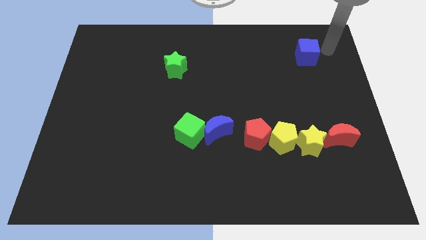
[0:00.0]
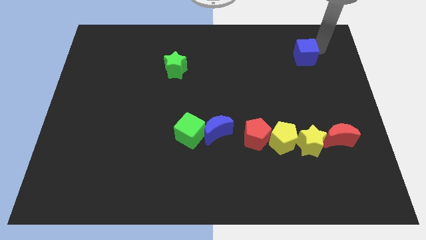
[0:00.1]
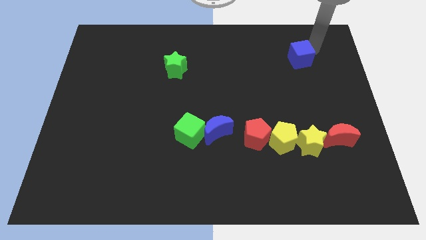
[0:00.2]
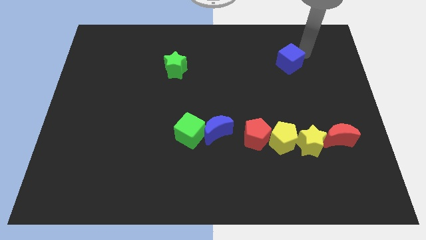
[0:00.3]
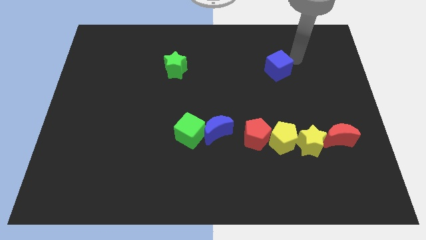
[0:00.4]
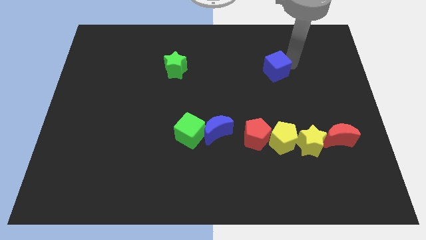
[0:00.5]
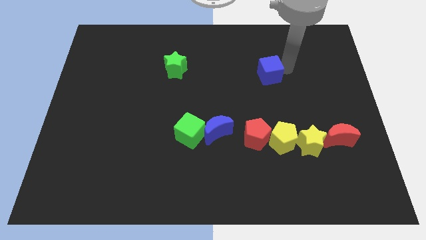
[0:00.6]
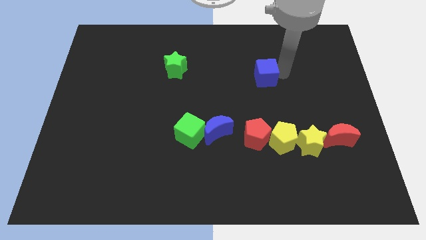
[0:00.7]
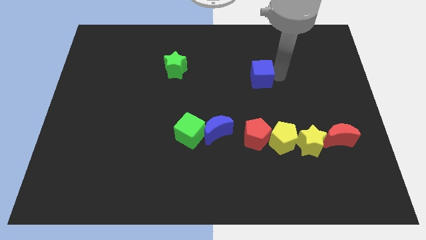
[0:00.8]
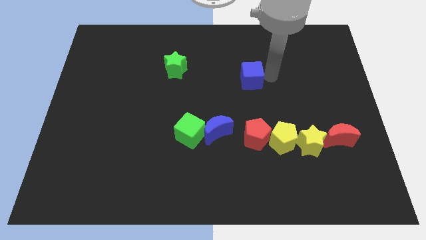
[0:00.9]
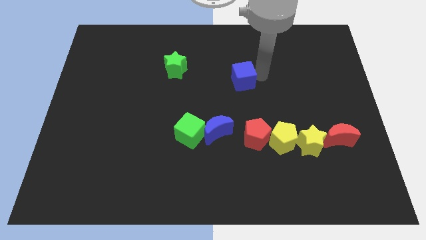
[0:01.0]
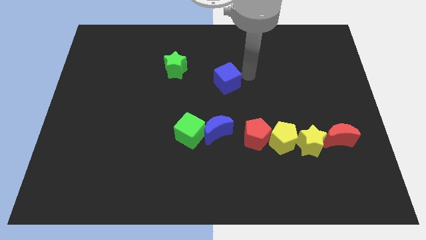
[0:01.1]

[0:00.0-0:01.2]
push the blue cube to the left of the board

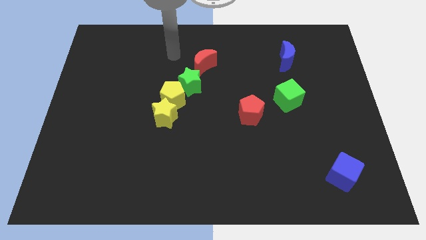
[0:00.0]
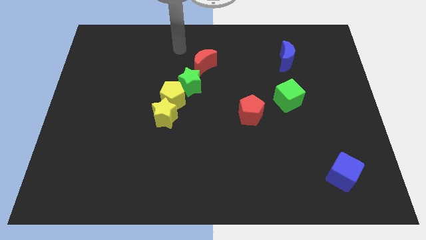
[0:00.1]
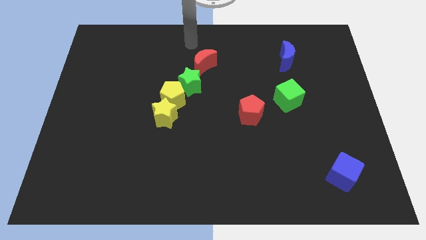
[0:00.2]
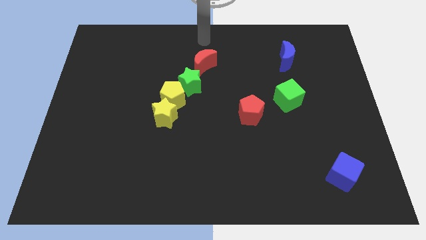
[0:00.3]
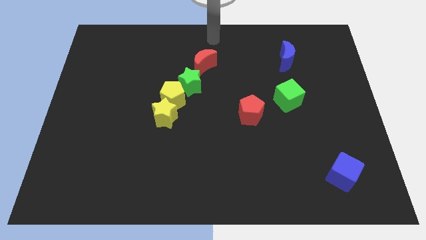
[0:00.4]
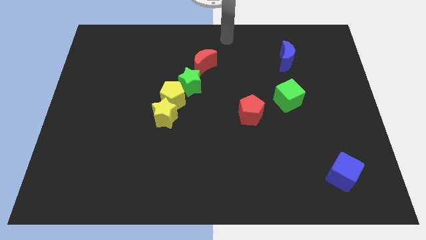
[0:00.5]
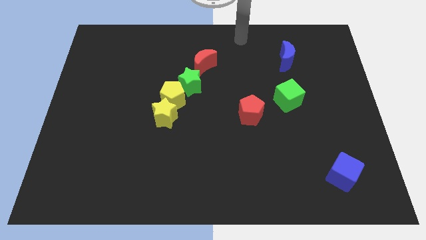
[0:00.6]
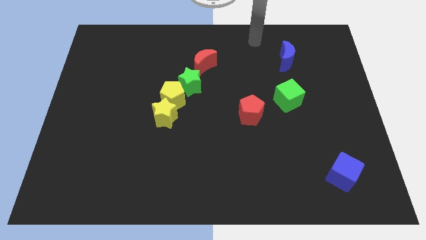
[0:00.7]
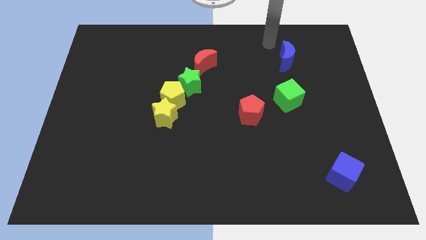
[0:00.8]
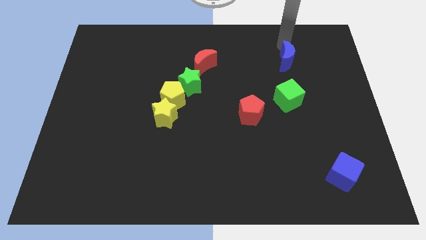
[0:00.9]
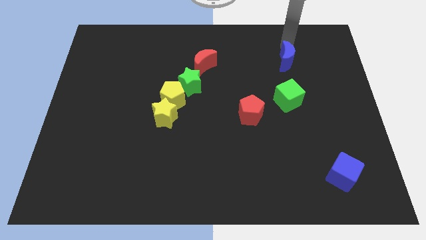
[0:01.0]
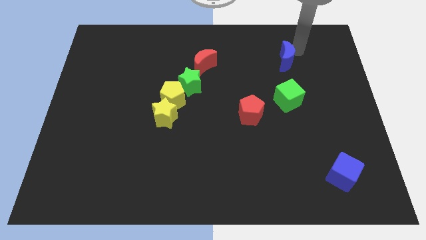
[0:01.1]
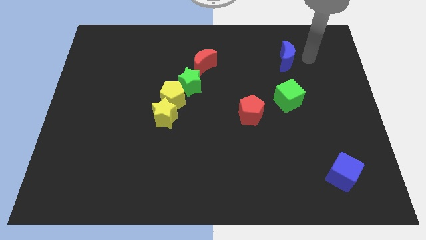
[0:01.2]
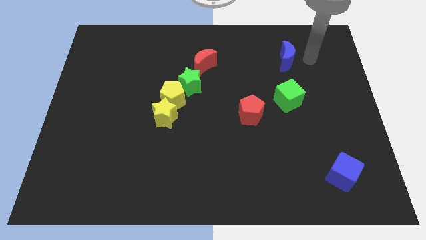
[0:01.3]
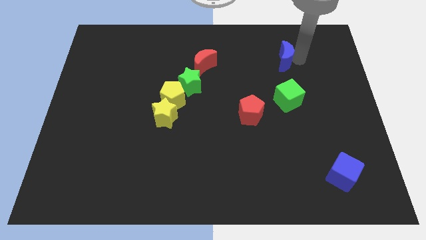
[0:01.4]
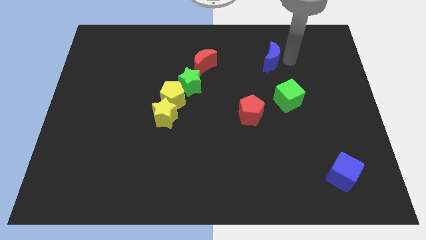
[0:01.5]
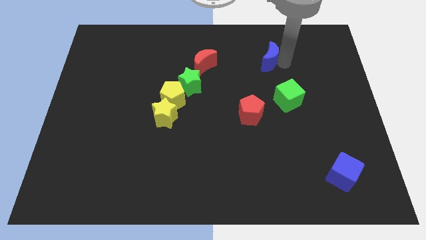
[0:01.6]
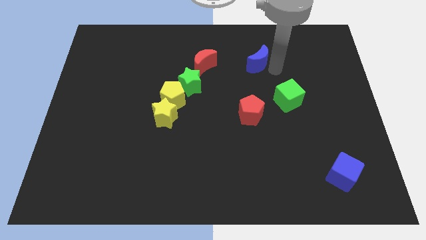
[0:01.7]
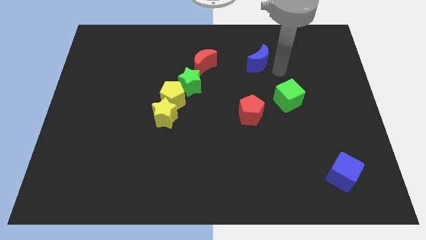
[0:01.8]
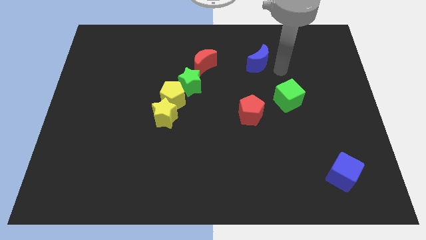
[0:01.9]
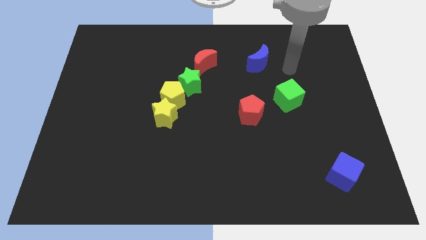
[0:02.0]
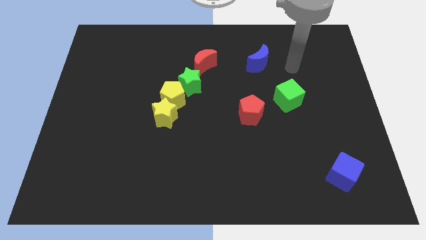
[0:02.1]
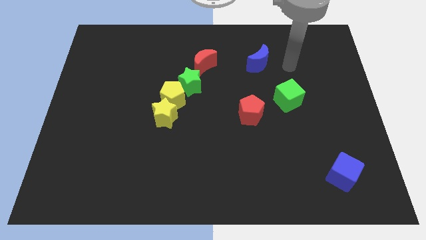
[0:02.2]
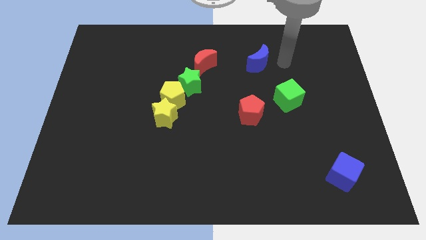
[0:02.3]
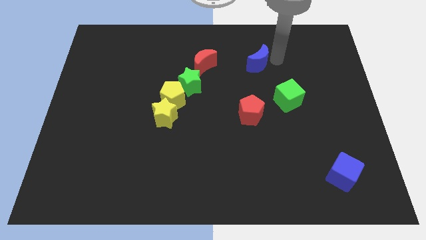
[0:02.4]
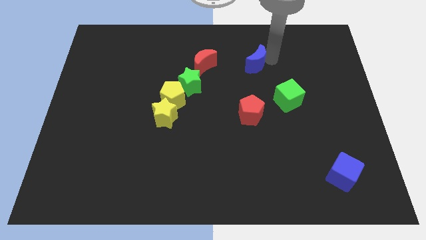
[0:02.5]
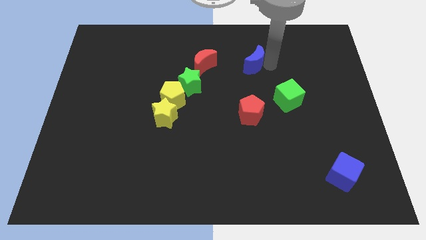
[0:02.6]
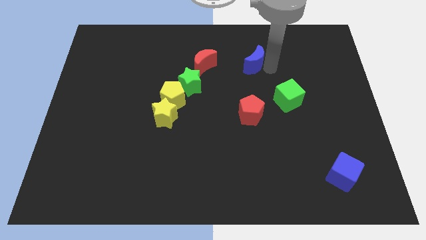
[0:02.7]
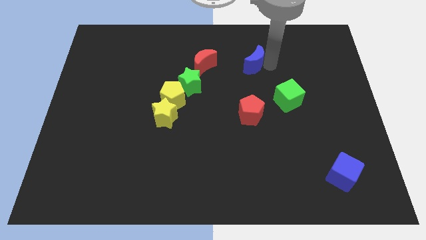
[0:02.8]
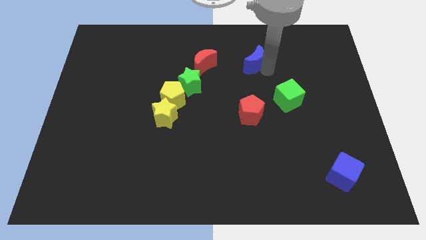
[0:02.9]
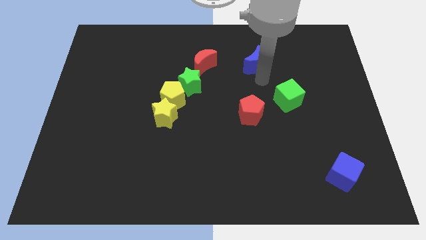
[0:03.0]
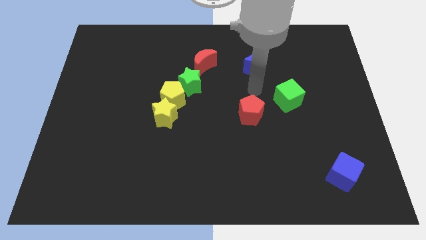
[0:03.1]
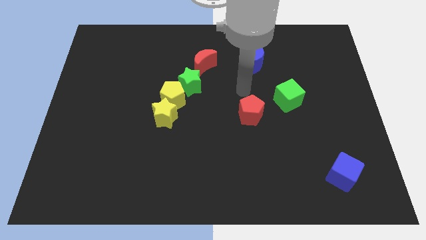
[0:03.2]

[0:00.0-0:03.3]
push the blue crescent to the top of the red pentagon

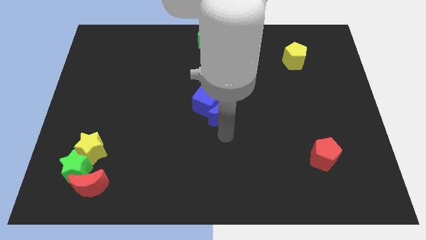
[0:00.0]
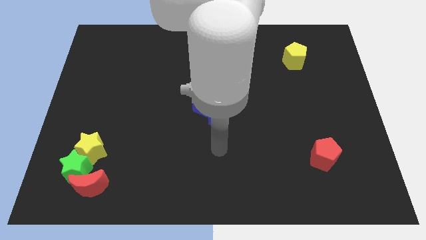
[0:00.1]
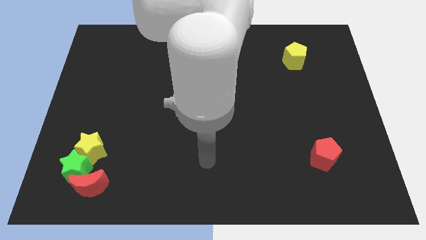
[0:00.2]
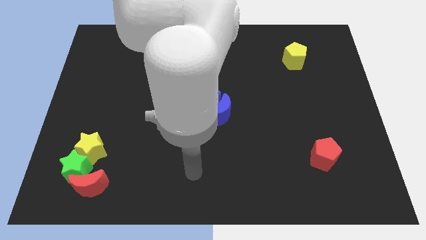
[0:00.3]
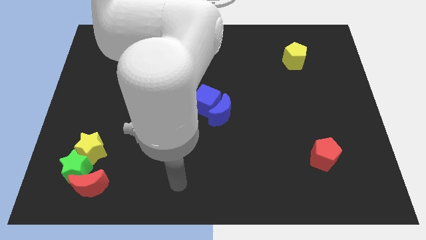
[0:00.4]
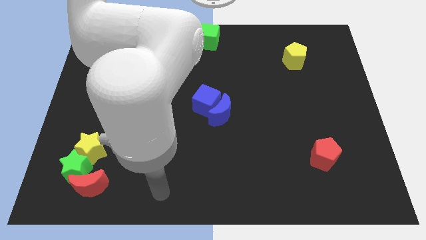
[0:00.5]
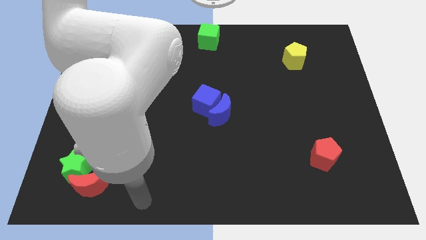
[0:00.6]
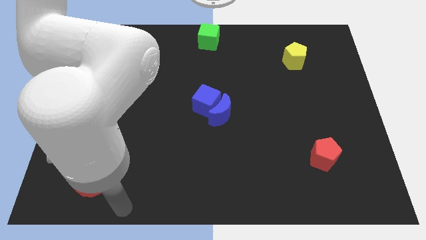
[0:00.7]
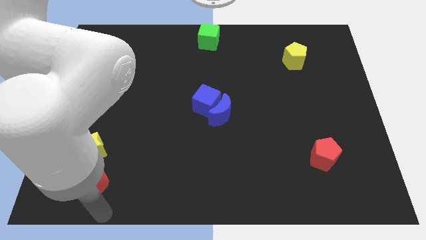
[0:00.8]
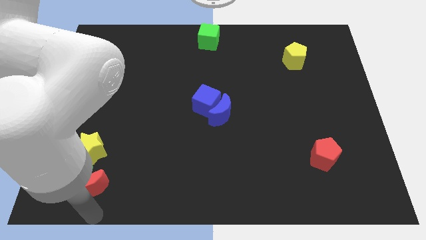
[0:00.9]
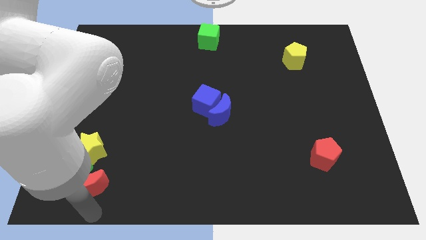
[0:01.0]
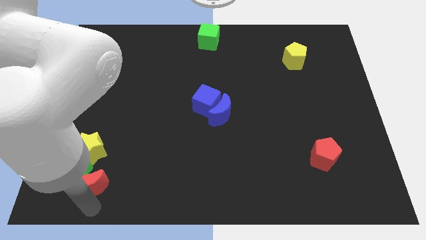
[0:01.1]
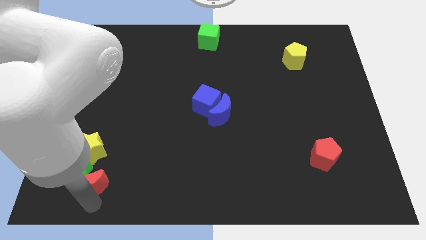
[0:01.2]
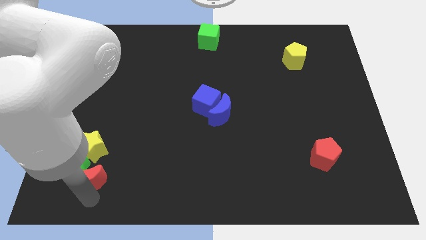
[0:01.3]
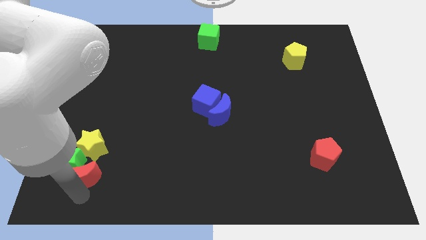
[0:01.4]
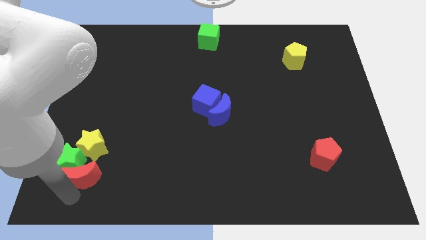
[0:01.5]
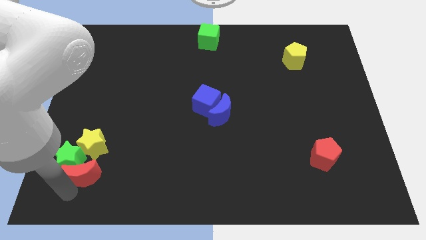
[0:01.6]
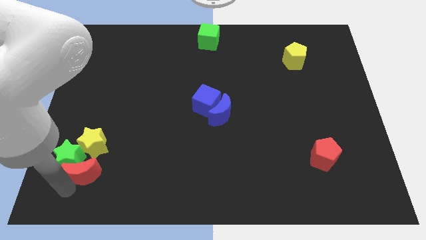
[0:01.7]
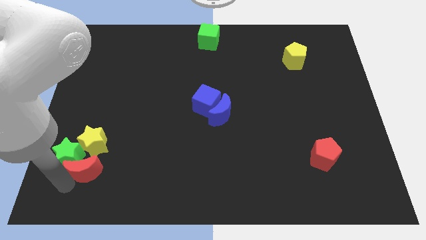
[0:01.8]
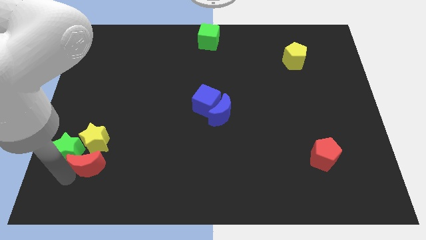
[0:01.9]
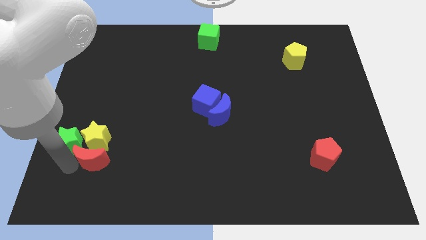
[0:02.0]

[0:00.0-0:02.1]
slide the red crescent yellow star and green star towards top side

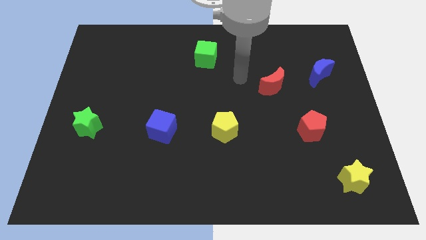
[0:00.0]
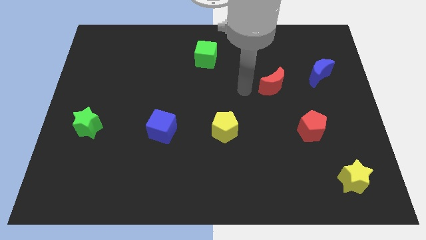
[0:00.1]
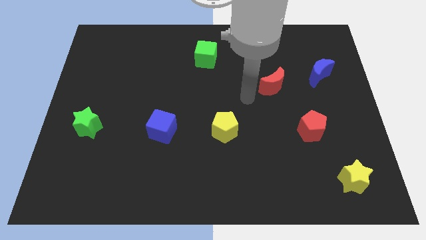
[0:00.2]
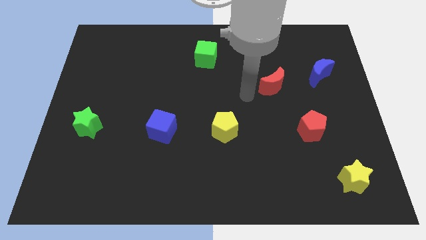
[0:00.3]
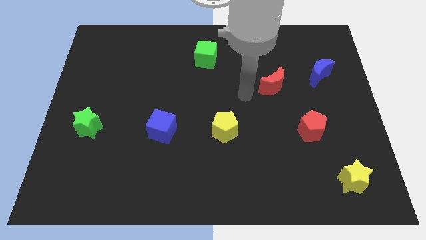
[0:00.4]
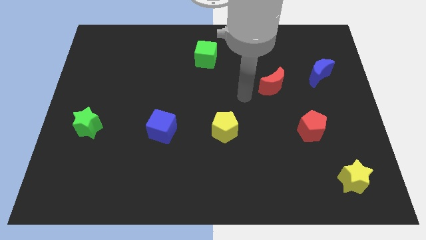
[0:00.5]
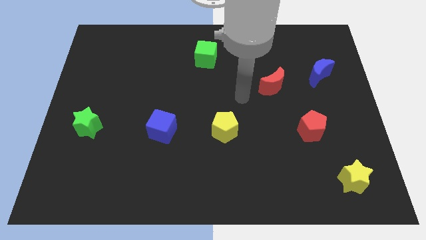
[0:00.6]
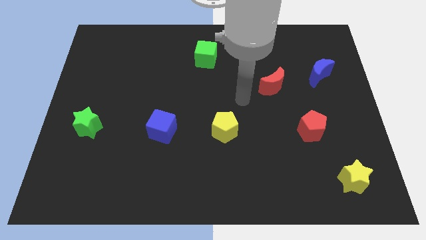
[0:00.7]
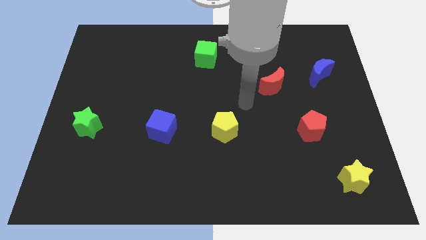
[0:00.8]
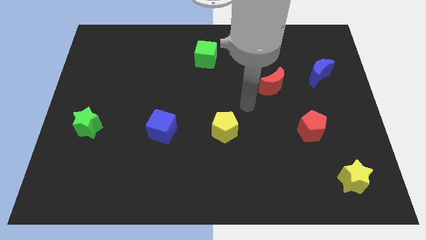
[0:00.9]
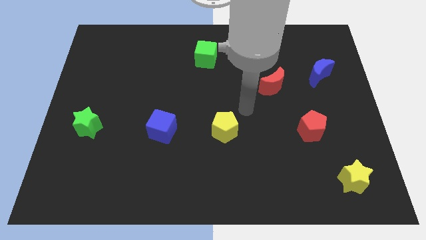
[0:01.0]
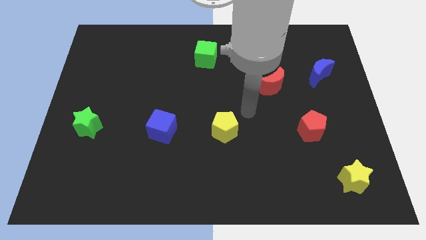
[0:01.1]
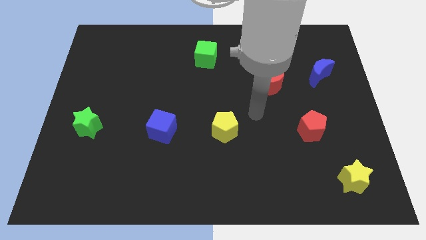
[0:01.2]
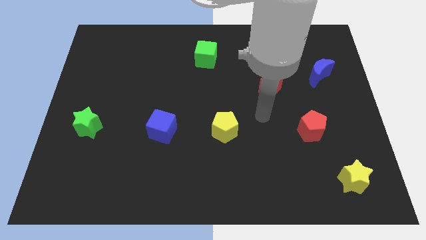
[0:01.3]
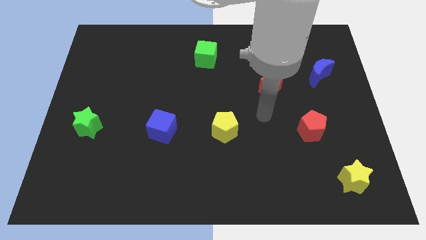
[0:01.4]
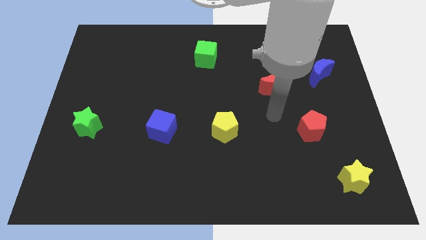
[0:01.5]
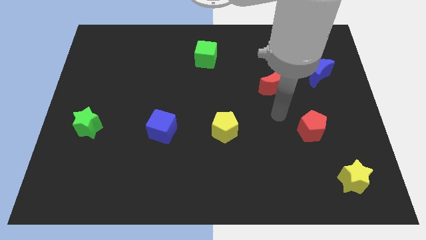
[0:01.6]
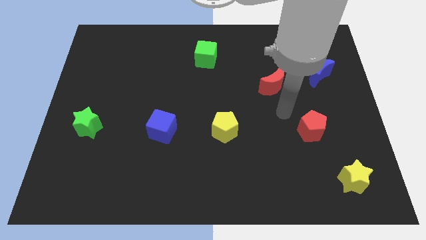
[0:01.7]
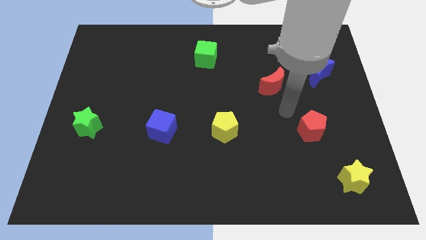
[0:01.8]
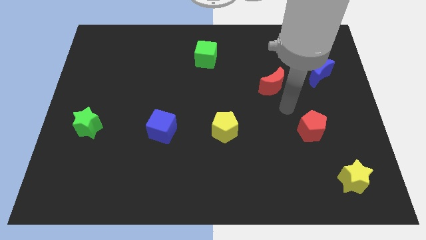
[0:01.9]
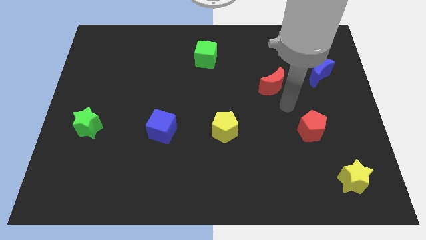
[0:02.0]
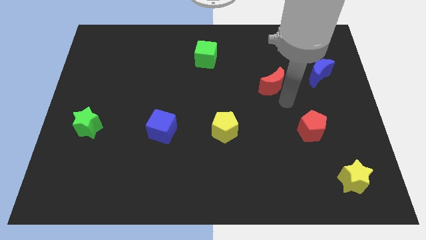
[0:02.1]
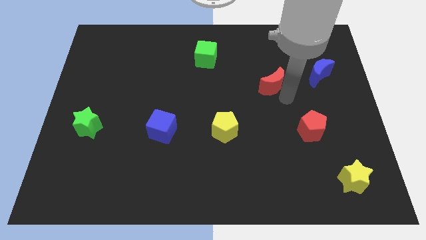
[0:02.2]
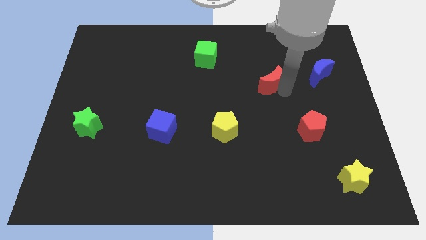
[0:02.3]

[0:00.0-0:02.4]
place the arm down to the red moon

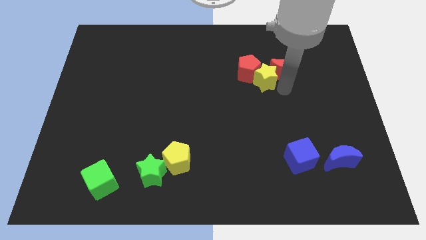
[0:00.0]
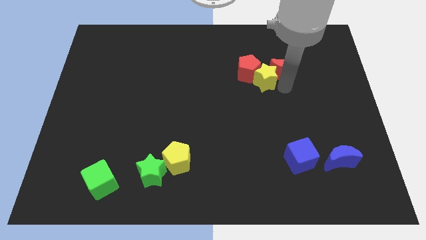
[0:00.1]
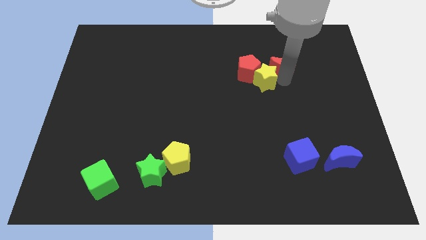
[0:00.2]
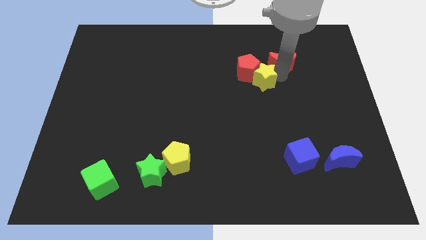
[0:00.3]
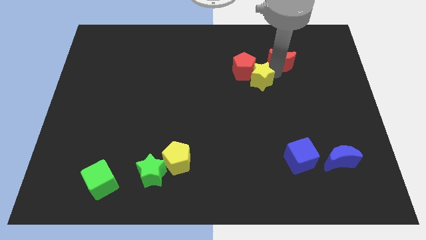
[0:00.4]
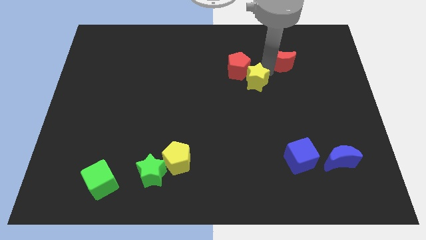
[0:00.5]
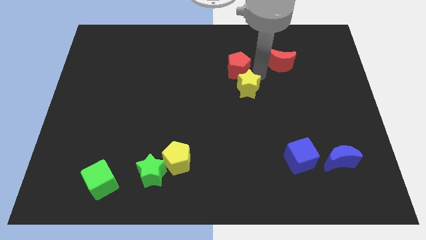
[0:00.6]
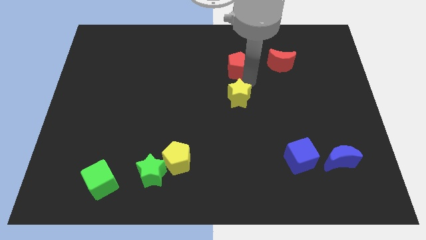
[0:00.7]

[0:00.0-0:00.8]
push the yellow star to the bottom of the red pentagon
